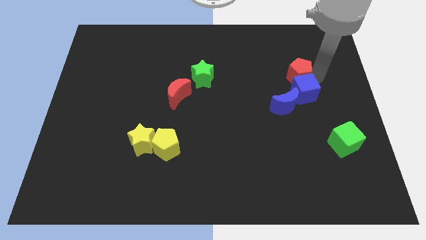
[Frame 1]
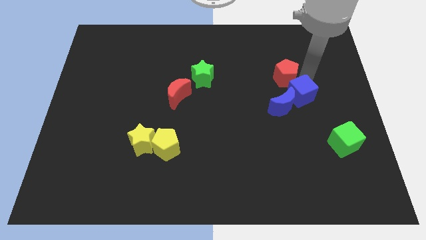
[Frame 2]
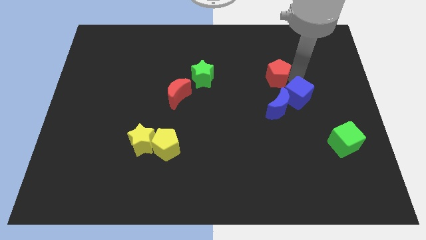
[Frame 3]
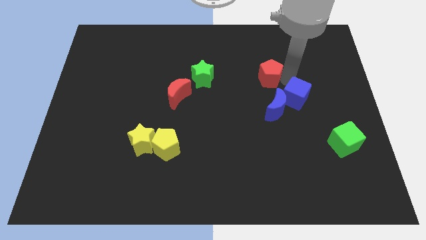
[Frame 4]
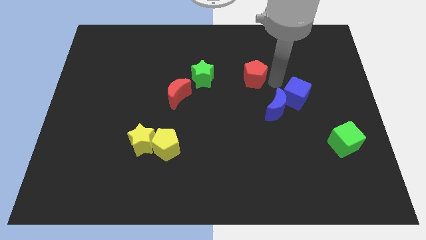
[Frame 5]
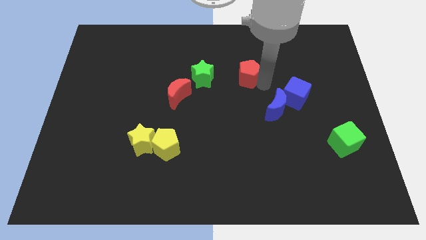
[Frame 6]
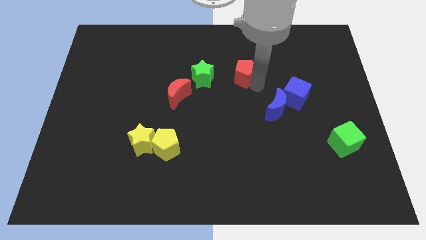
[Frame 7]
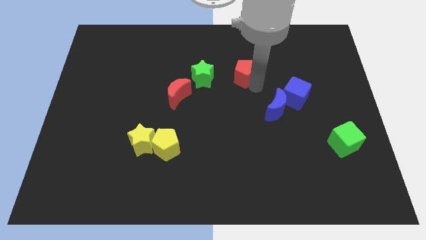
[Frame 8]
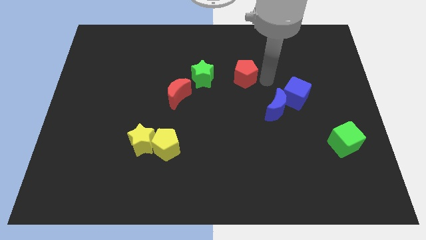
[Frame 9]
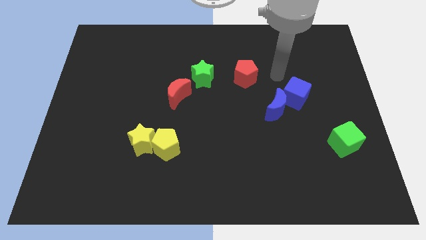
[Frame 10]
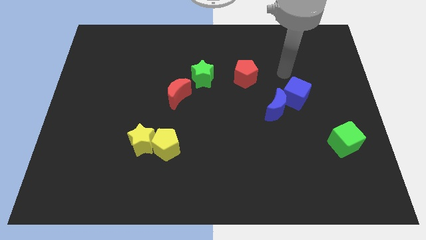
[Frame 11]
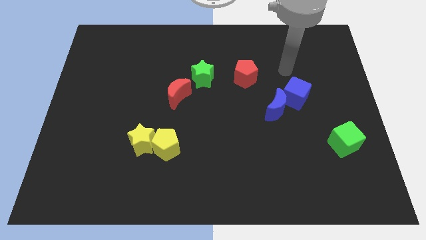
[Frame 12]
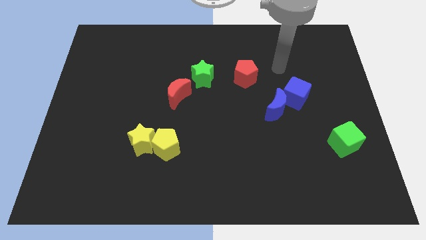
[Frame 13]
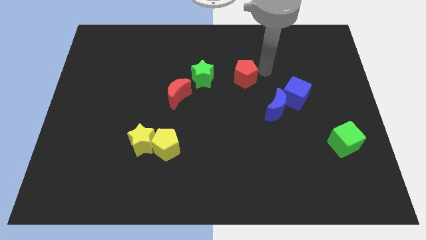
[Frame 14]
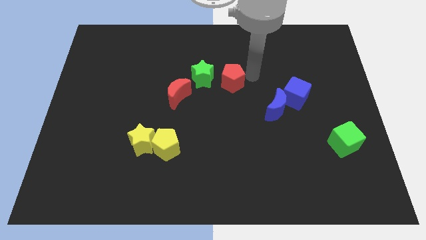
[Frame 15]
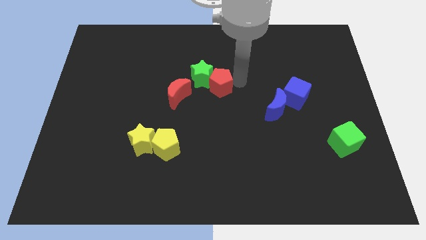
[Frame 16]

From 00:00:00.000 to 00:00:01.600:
place the red pentagon to the right of the green star

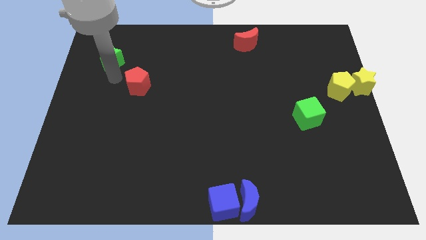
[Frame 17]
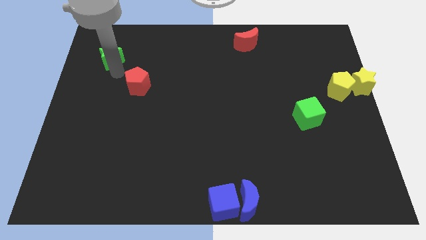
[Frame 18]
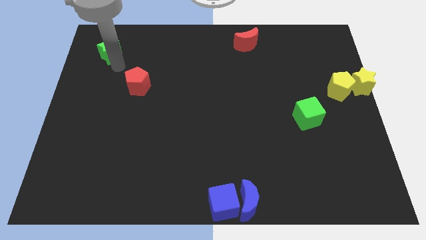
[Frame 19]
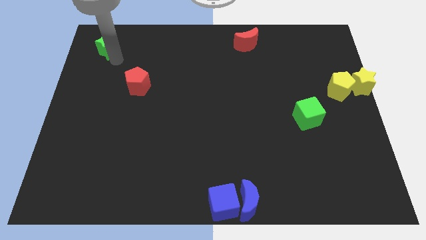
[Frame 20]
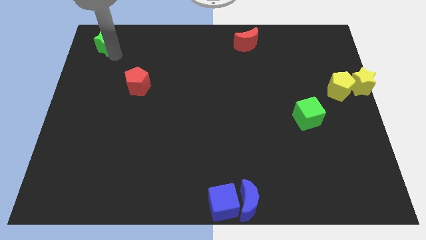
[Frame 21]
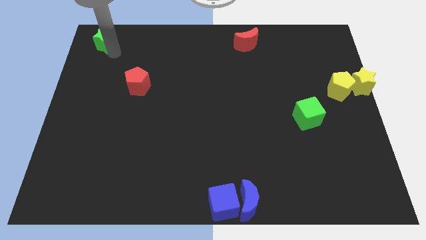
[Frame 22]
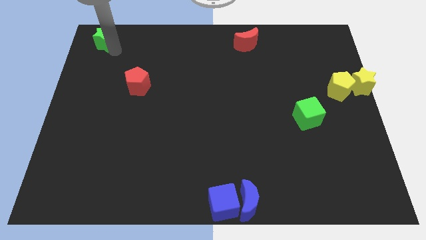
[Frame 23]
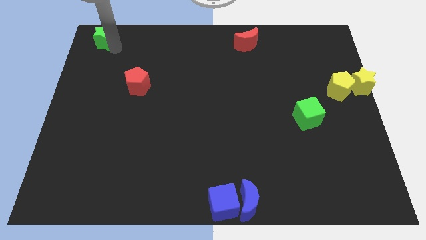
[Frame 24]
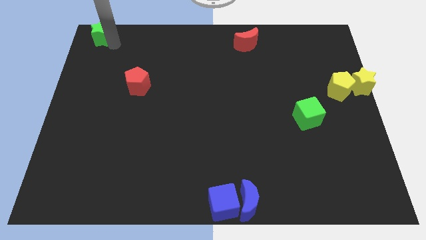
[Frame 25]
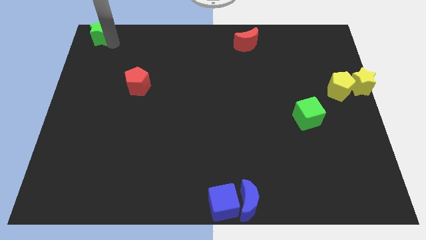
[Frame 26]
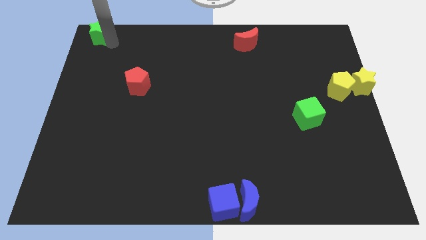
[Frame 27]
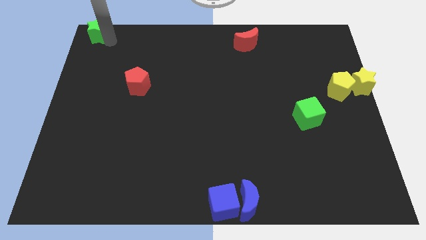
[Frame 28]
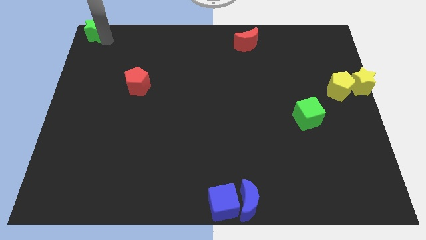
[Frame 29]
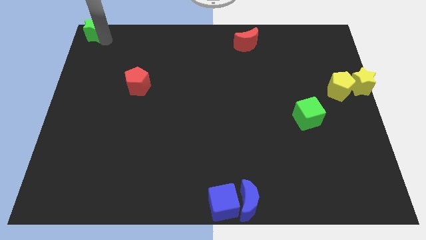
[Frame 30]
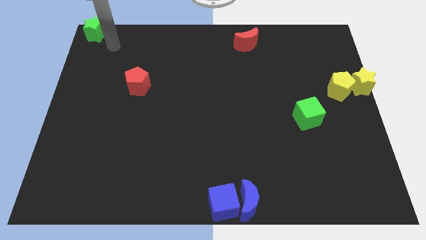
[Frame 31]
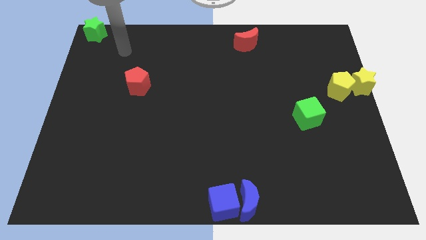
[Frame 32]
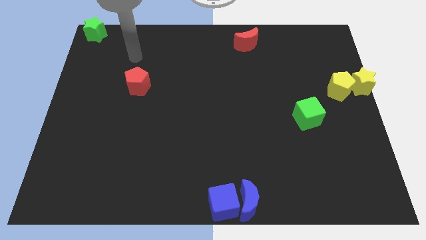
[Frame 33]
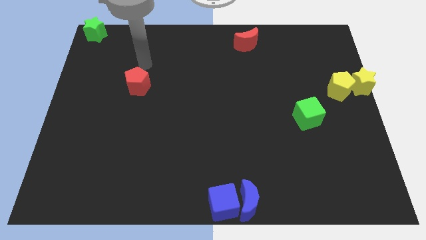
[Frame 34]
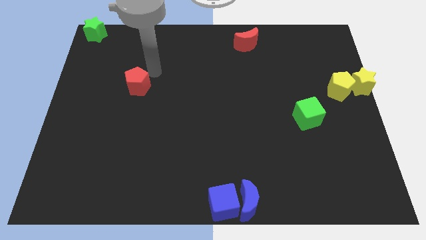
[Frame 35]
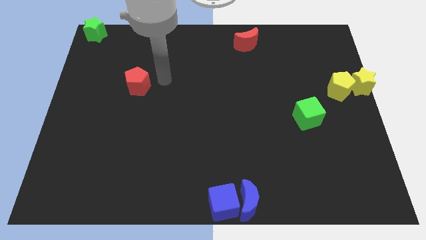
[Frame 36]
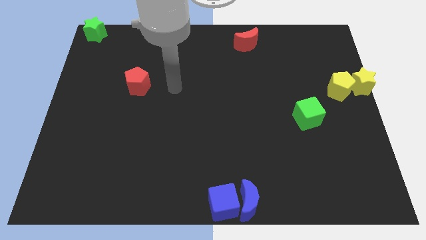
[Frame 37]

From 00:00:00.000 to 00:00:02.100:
place the green star towards top left

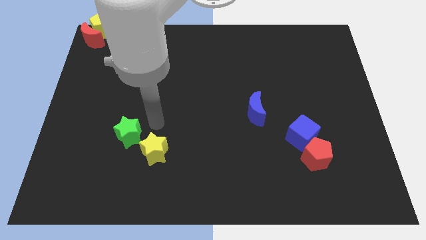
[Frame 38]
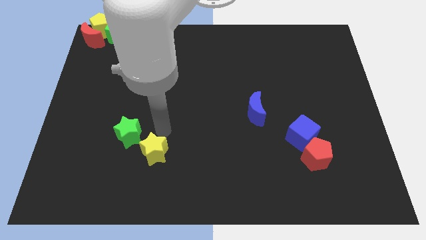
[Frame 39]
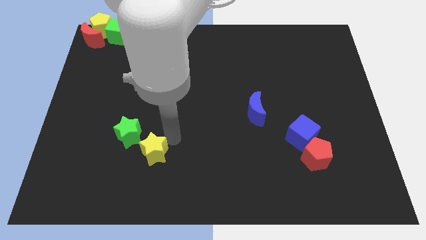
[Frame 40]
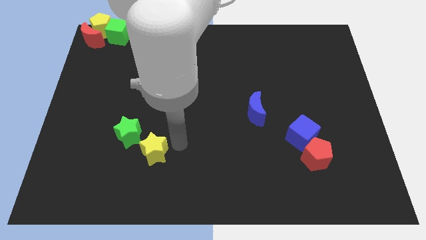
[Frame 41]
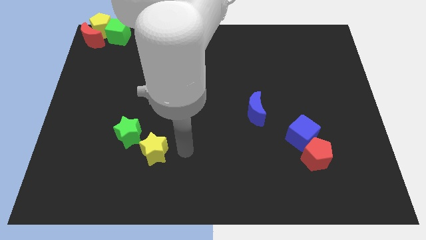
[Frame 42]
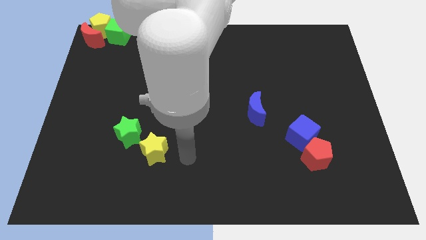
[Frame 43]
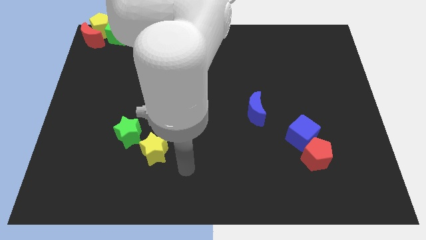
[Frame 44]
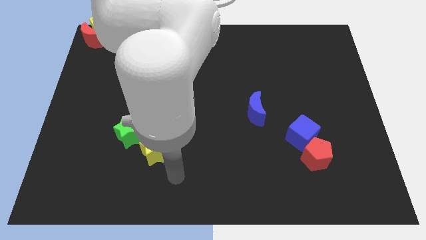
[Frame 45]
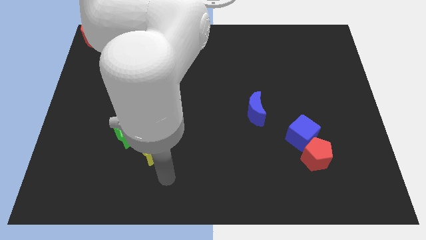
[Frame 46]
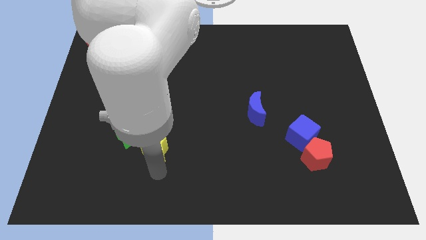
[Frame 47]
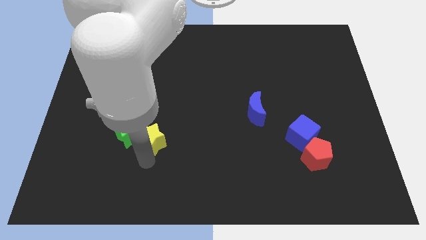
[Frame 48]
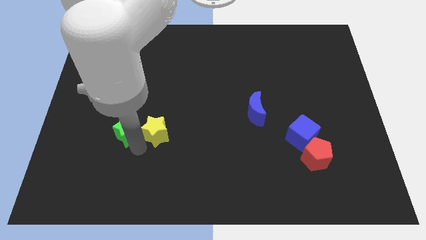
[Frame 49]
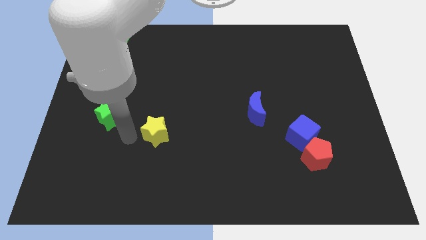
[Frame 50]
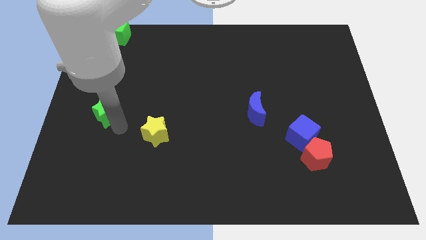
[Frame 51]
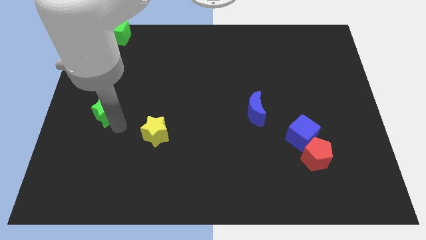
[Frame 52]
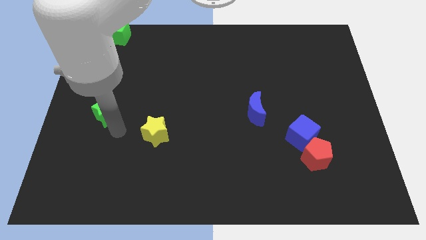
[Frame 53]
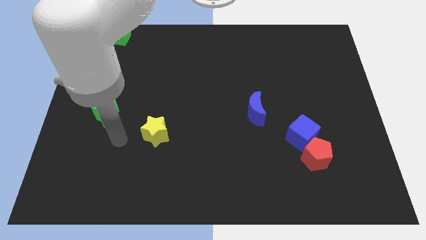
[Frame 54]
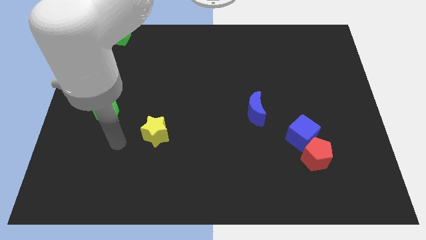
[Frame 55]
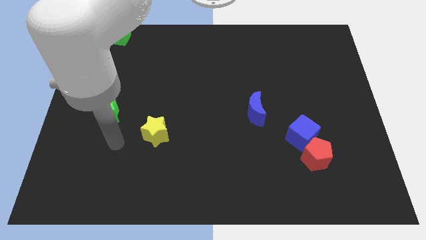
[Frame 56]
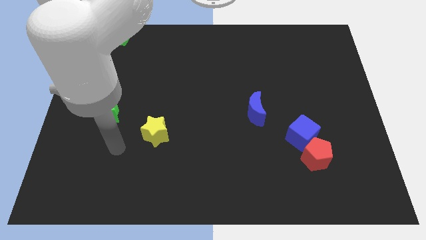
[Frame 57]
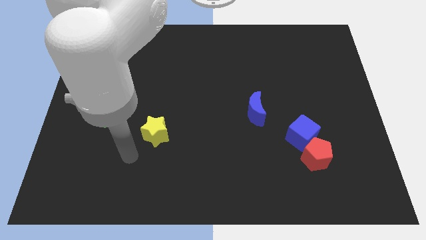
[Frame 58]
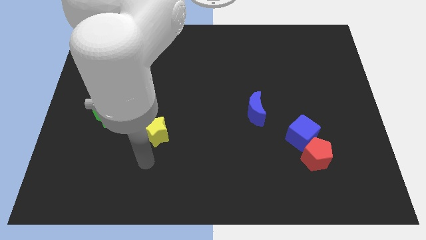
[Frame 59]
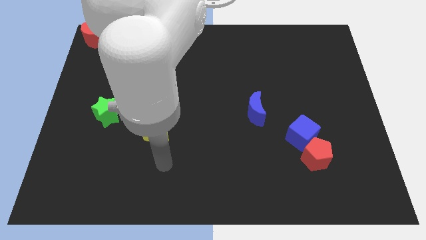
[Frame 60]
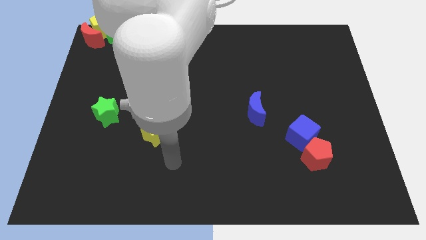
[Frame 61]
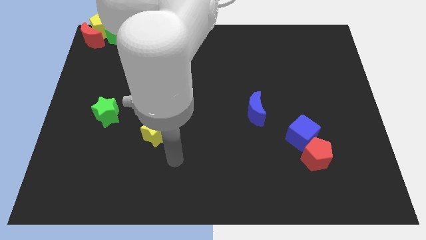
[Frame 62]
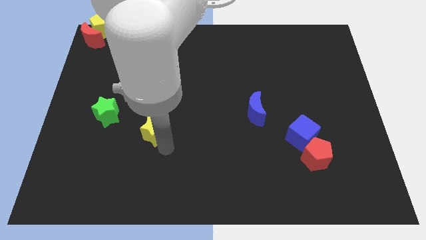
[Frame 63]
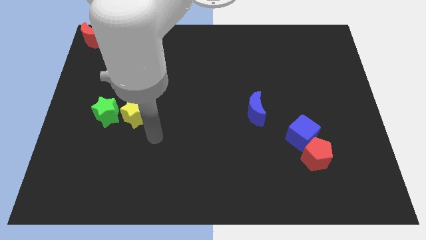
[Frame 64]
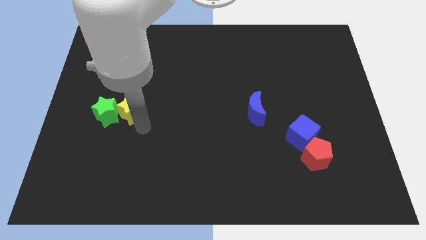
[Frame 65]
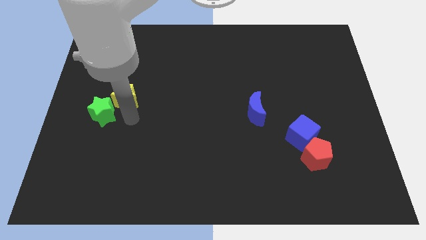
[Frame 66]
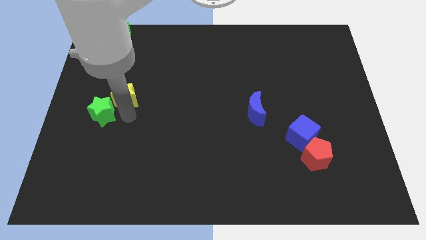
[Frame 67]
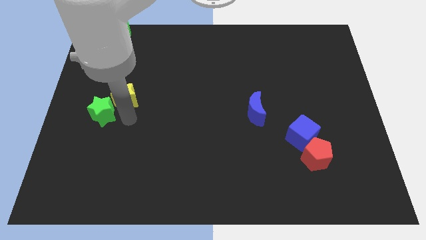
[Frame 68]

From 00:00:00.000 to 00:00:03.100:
push the yellow and green stars towards the top left

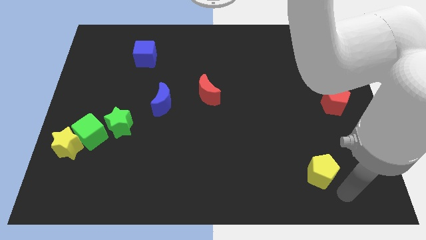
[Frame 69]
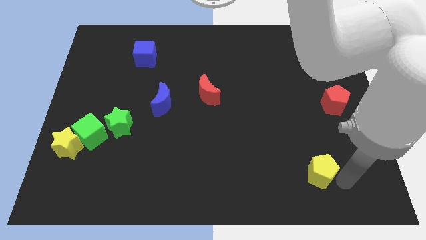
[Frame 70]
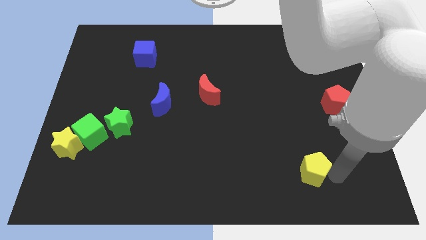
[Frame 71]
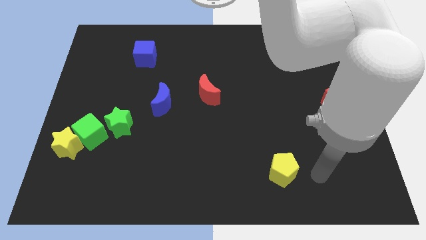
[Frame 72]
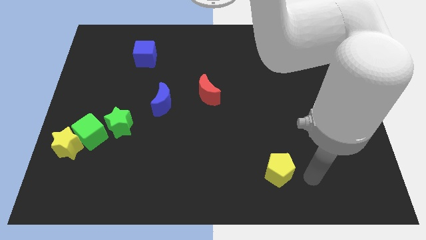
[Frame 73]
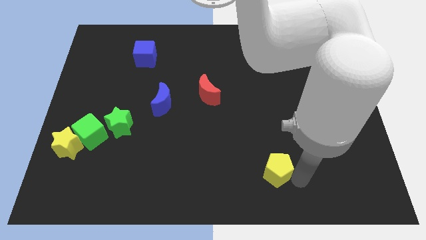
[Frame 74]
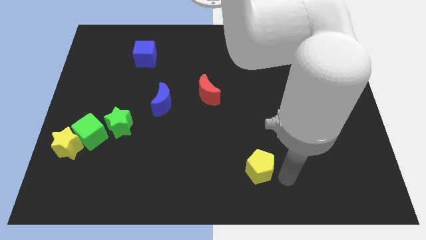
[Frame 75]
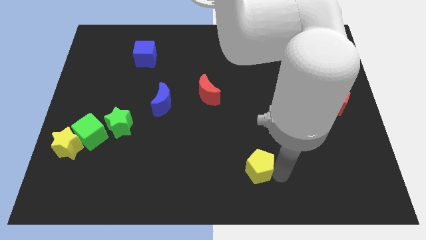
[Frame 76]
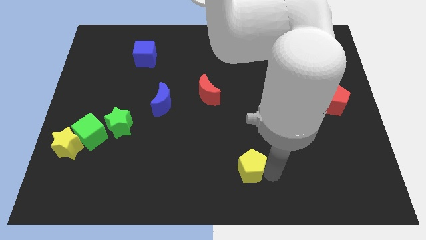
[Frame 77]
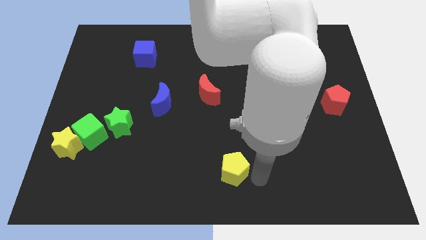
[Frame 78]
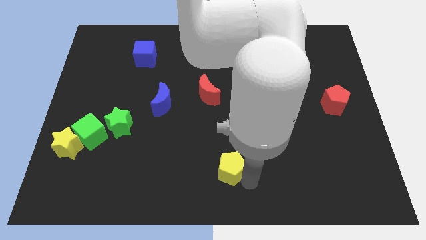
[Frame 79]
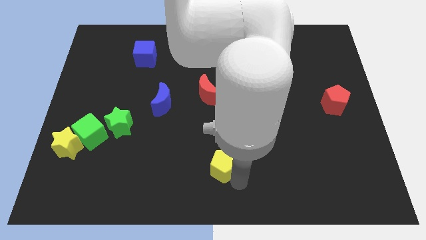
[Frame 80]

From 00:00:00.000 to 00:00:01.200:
move yellow pentagon to the middle of the board

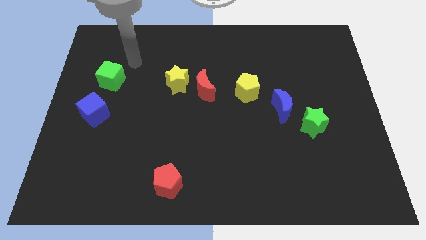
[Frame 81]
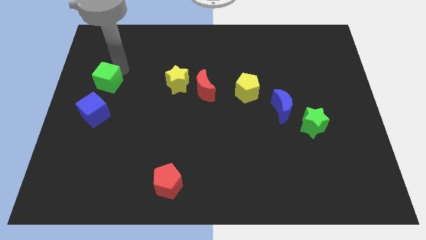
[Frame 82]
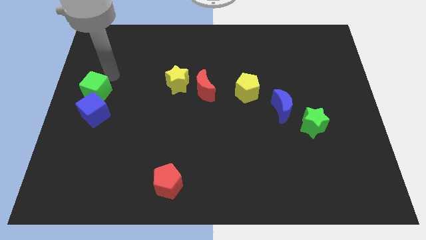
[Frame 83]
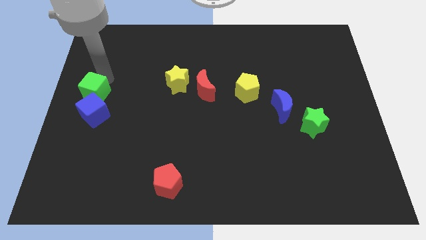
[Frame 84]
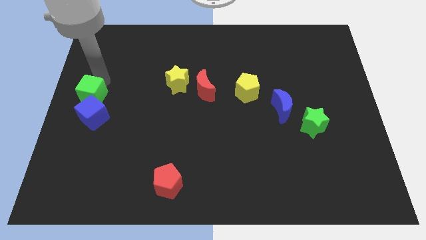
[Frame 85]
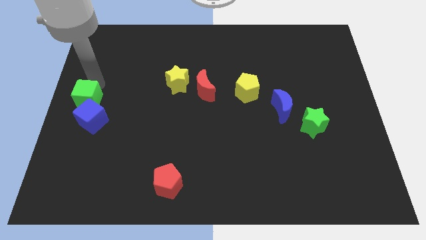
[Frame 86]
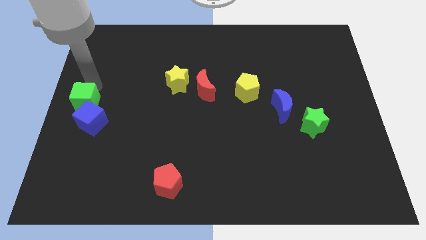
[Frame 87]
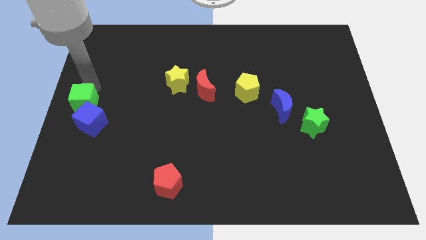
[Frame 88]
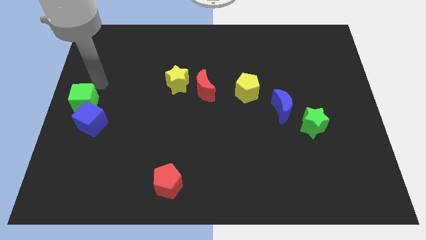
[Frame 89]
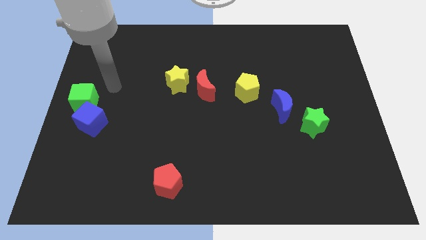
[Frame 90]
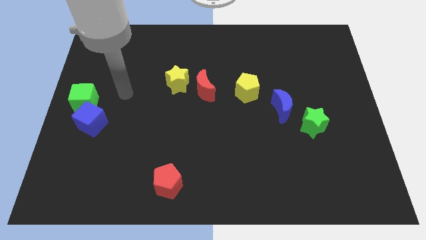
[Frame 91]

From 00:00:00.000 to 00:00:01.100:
push the green cube into blue cube
